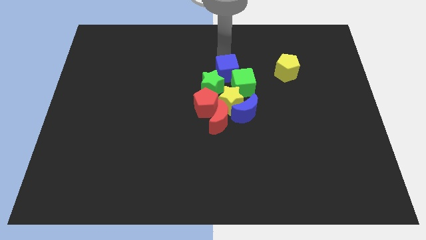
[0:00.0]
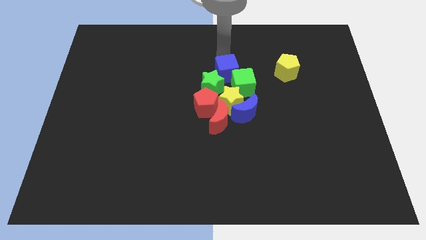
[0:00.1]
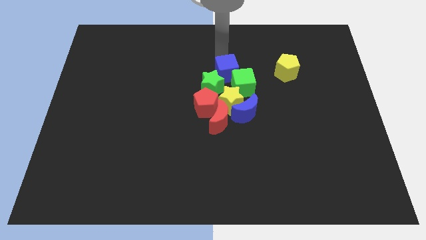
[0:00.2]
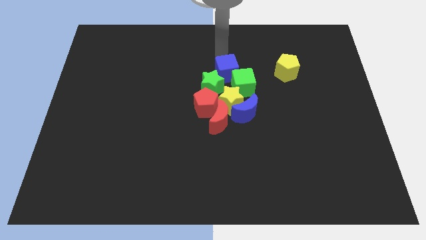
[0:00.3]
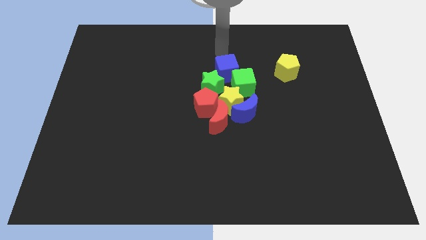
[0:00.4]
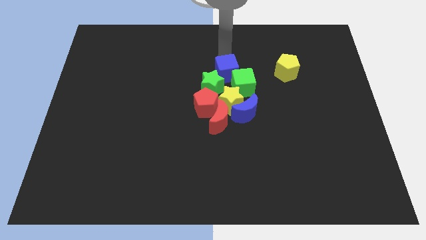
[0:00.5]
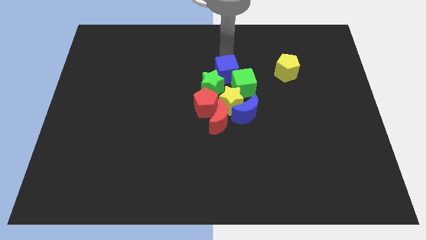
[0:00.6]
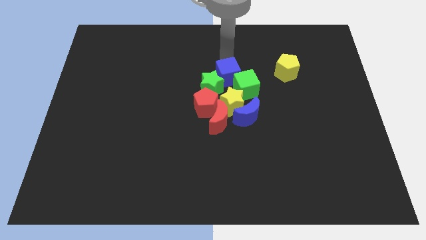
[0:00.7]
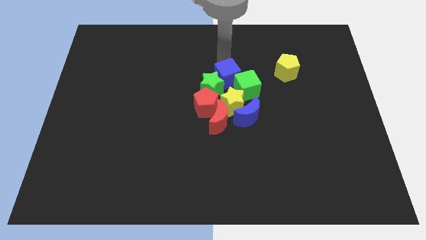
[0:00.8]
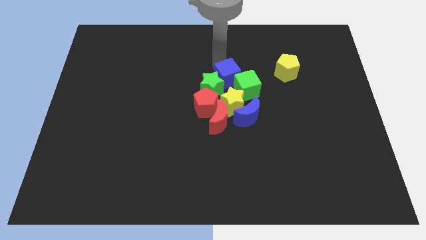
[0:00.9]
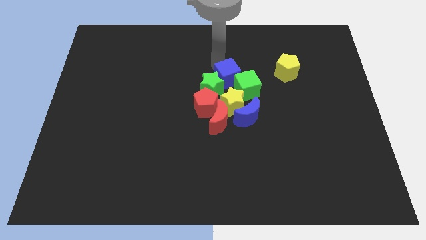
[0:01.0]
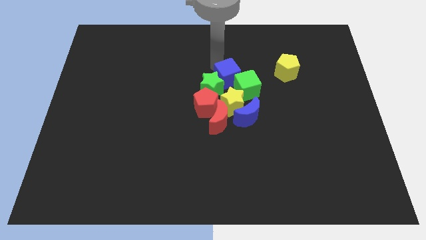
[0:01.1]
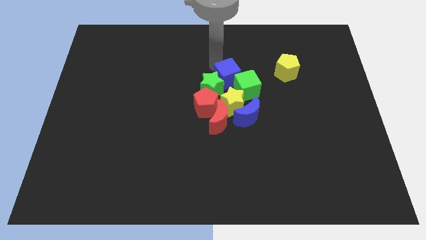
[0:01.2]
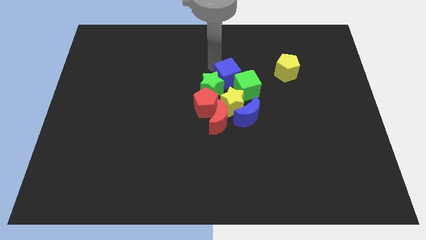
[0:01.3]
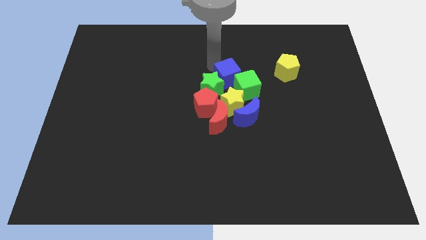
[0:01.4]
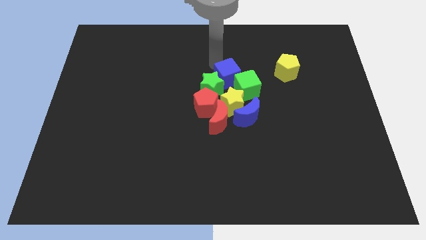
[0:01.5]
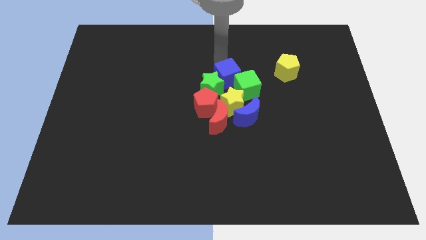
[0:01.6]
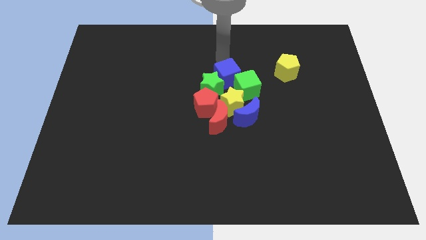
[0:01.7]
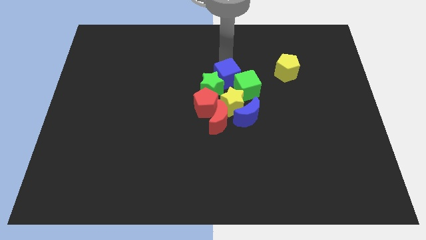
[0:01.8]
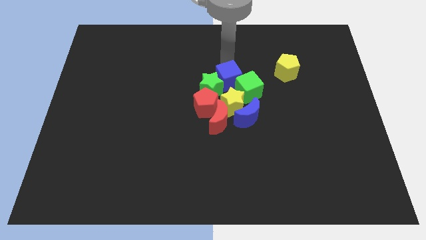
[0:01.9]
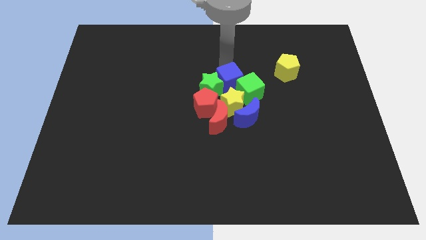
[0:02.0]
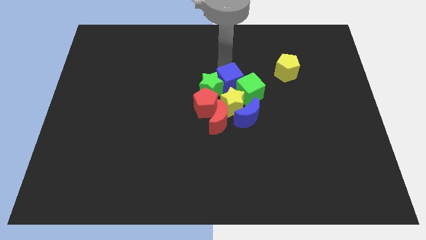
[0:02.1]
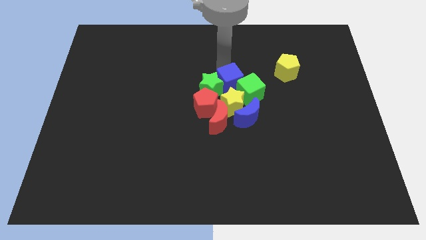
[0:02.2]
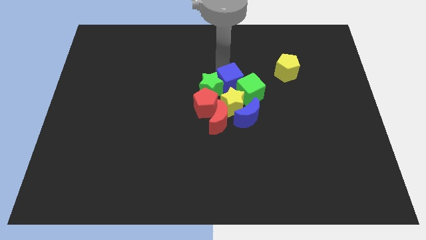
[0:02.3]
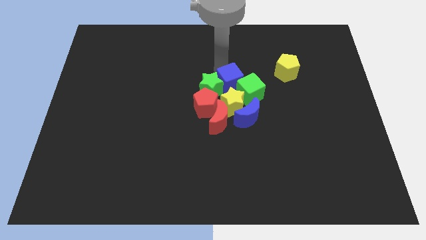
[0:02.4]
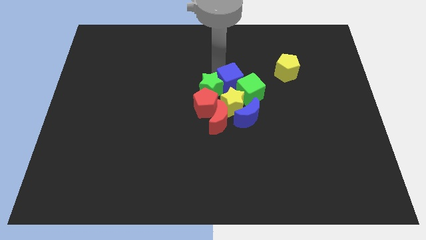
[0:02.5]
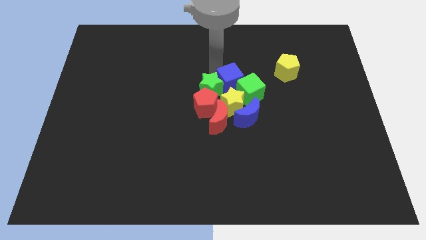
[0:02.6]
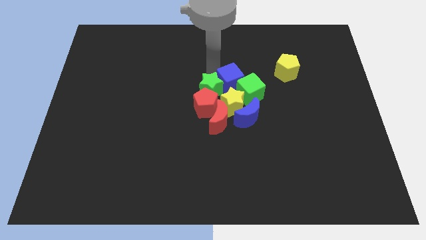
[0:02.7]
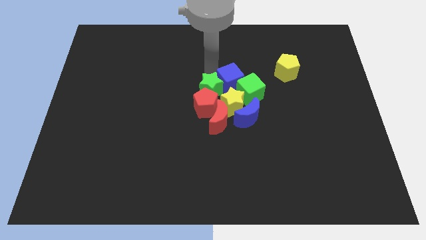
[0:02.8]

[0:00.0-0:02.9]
move the blue cube slightly down

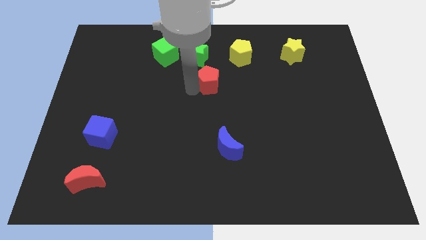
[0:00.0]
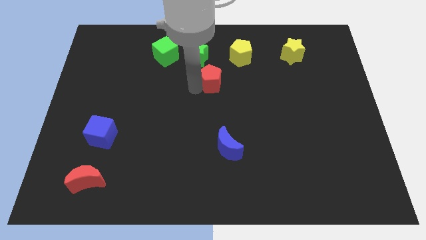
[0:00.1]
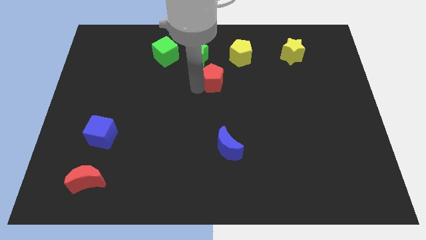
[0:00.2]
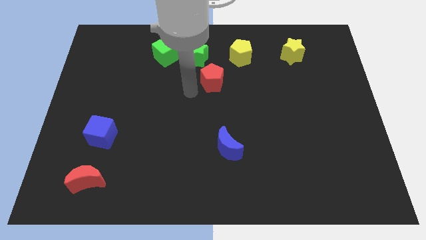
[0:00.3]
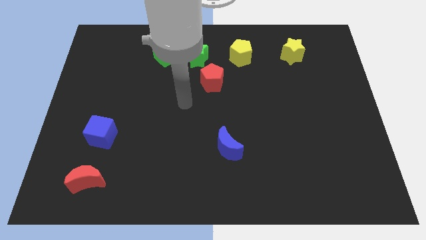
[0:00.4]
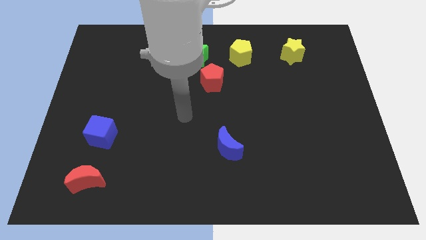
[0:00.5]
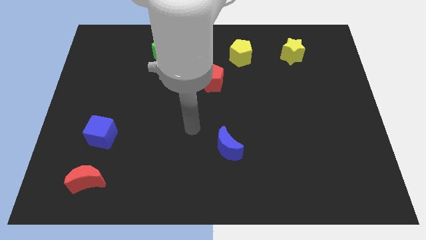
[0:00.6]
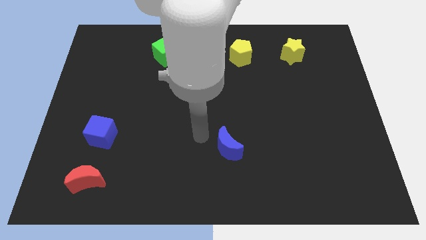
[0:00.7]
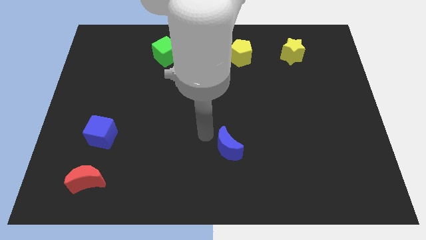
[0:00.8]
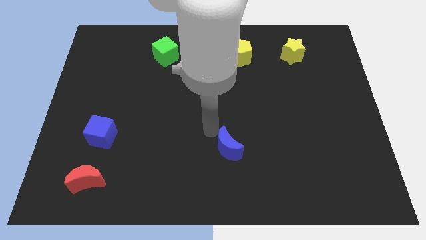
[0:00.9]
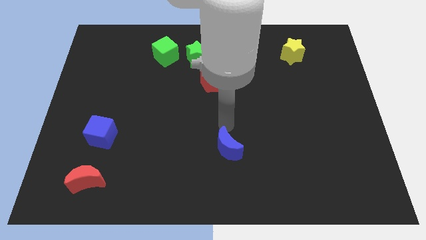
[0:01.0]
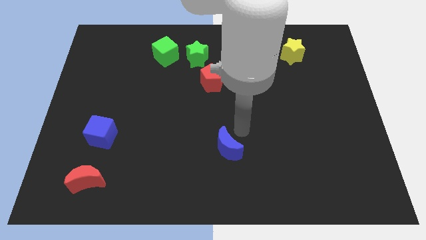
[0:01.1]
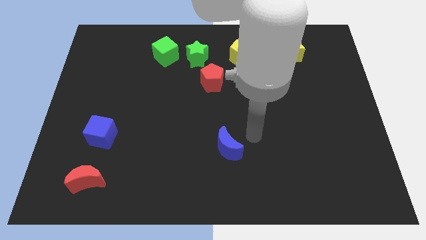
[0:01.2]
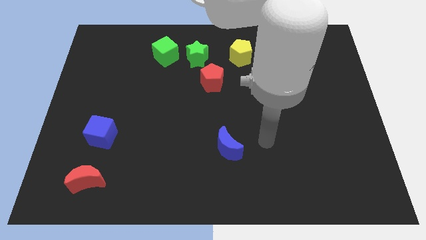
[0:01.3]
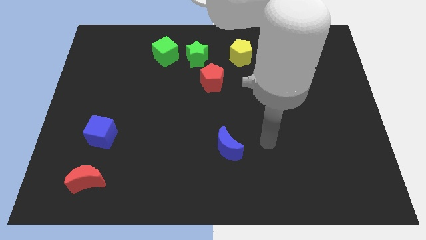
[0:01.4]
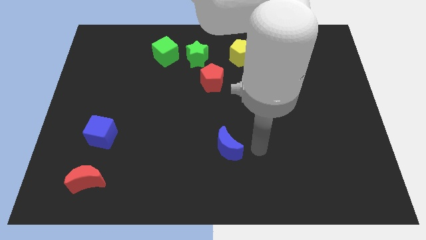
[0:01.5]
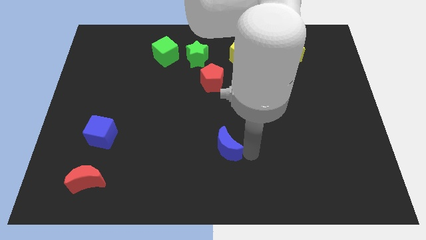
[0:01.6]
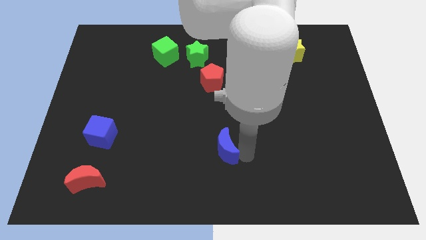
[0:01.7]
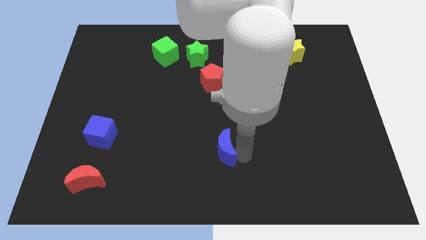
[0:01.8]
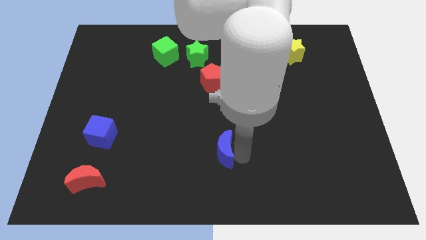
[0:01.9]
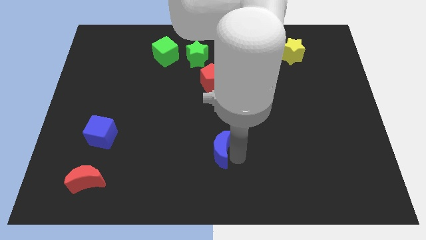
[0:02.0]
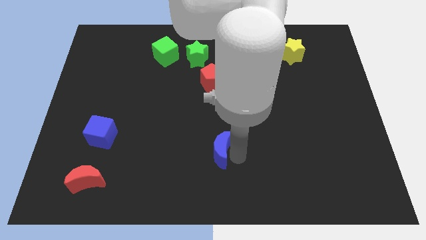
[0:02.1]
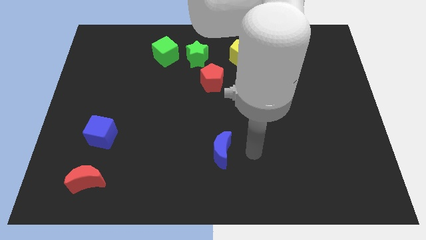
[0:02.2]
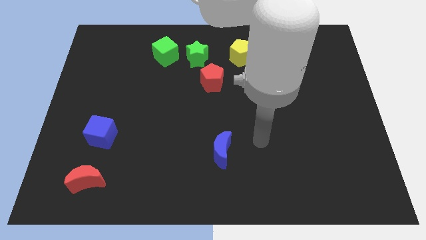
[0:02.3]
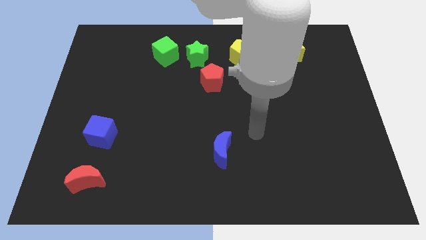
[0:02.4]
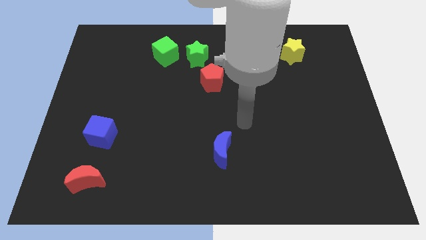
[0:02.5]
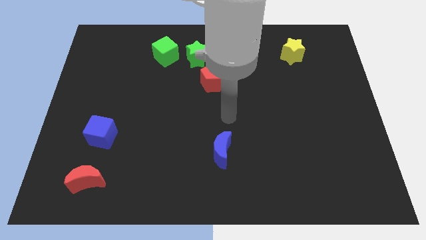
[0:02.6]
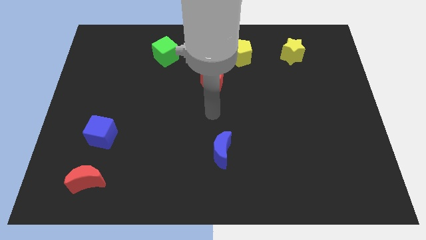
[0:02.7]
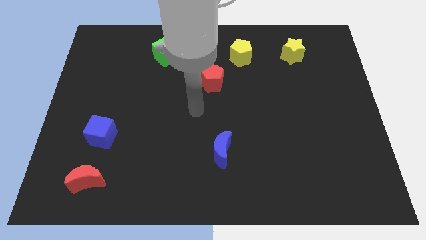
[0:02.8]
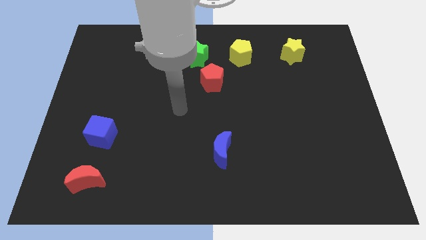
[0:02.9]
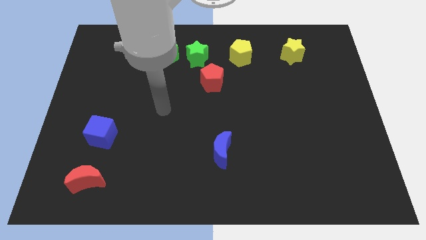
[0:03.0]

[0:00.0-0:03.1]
move the blue crescent slightly to the left

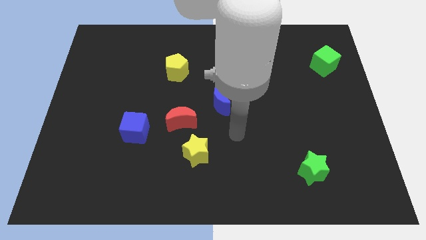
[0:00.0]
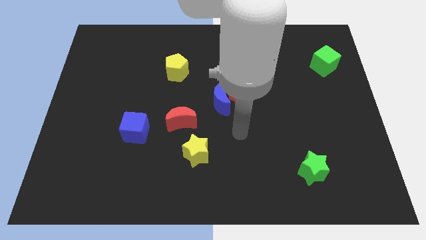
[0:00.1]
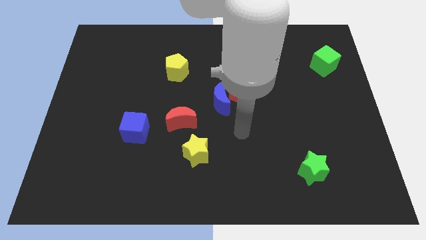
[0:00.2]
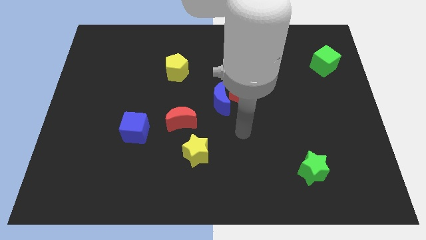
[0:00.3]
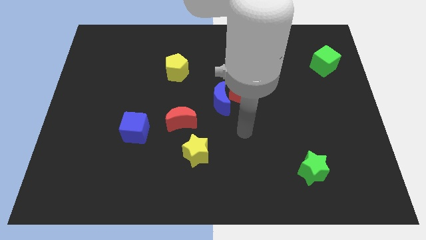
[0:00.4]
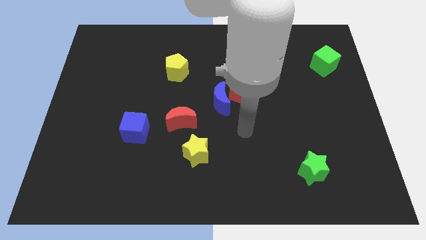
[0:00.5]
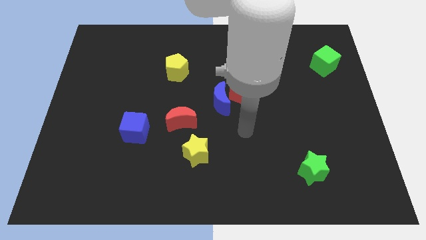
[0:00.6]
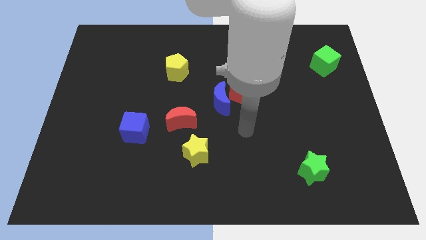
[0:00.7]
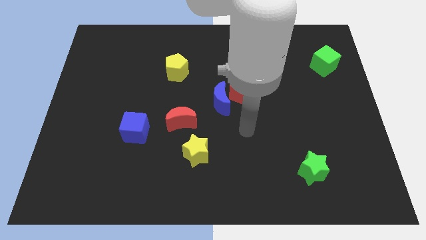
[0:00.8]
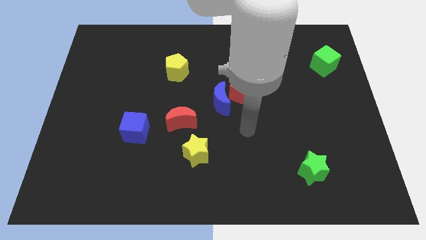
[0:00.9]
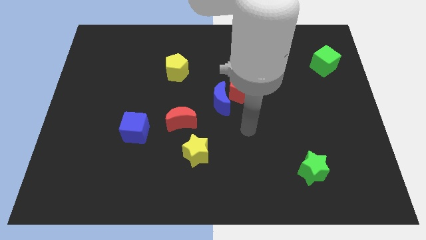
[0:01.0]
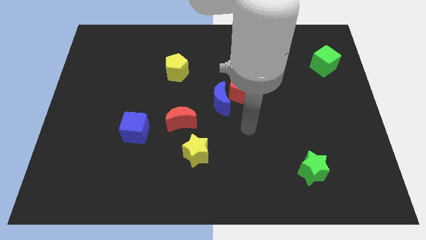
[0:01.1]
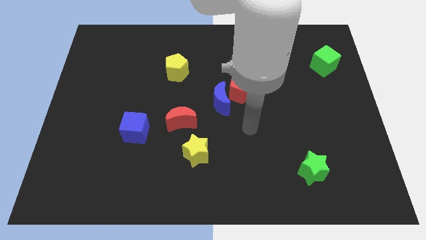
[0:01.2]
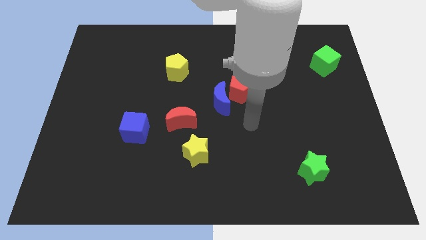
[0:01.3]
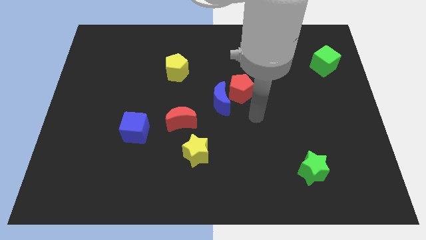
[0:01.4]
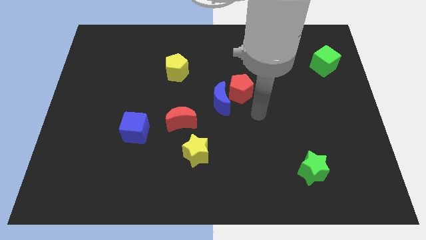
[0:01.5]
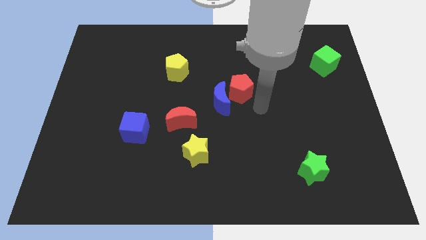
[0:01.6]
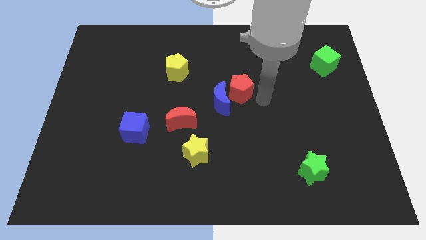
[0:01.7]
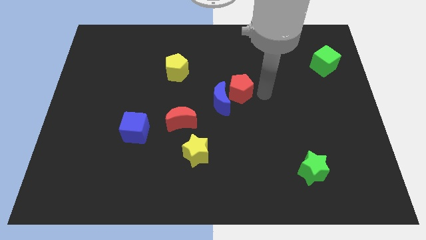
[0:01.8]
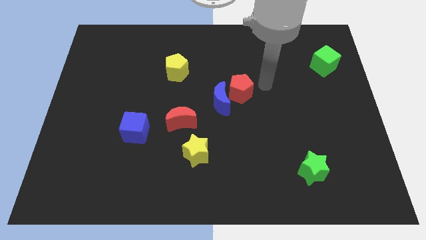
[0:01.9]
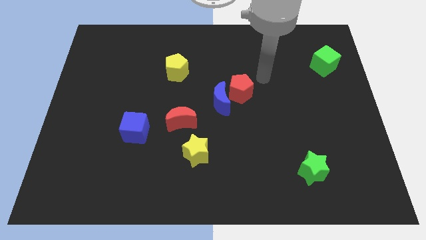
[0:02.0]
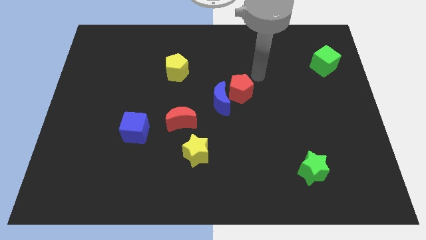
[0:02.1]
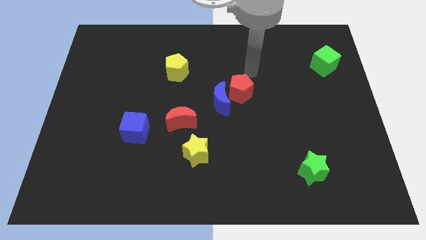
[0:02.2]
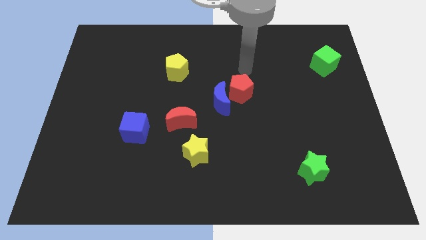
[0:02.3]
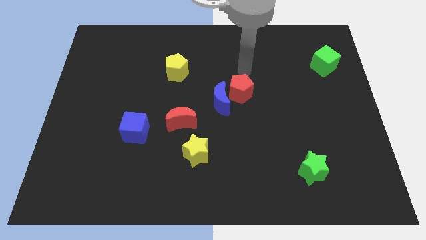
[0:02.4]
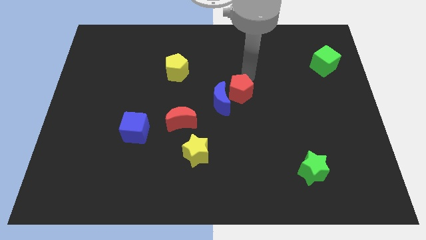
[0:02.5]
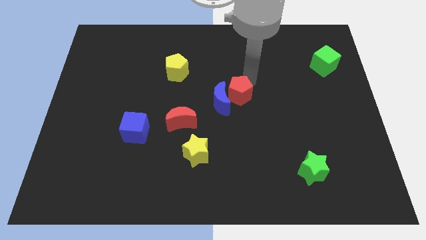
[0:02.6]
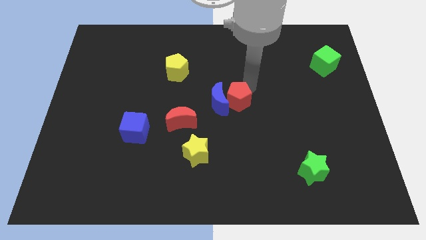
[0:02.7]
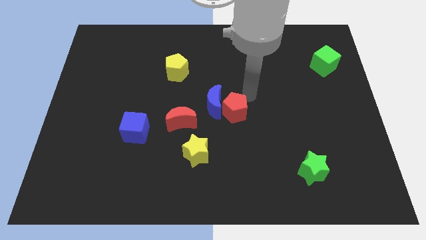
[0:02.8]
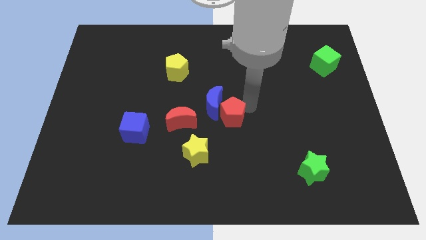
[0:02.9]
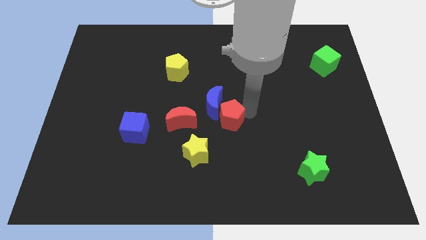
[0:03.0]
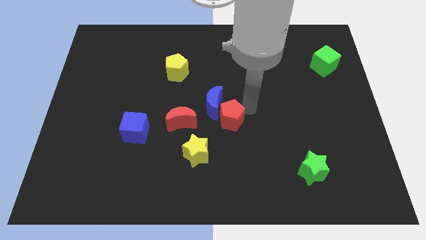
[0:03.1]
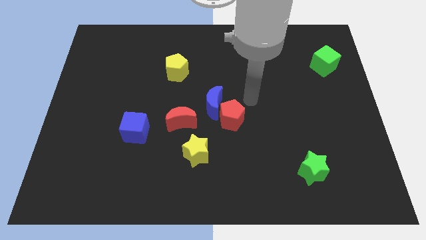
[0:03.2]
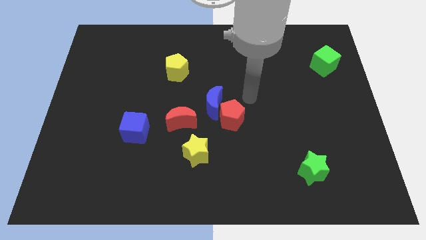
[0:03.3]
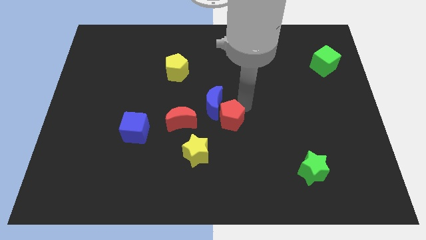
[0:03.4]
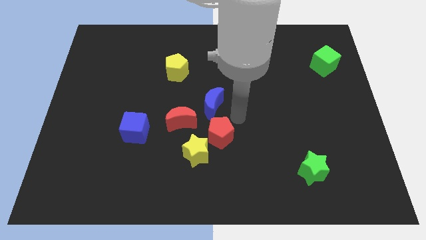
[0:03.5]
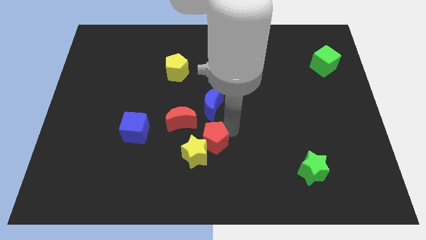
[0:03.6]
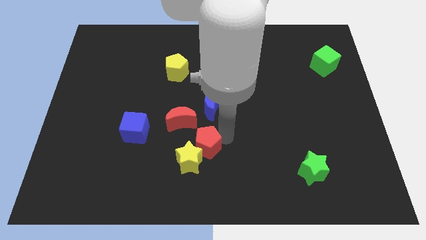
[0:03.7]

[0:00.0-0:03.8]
push red pentagon to the top right of yellow star
